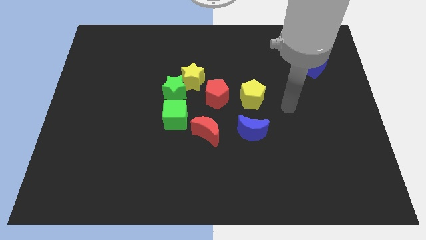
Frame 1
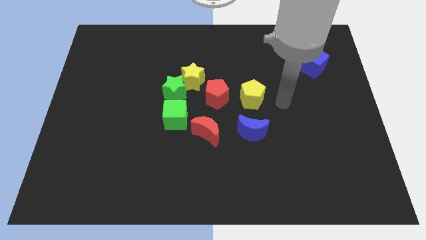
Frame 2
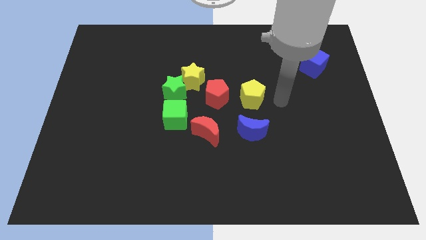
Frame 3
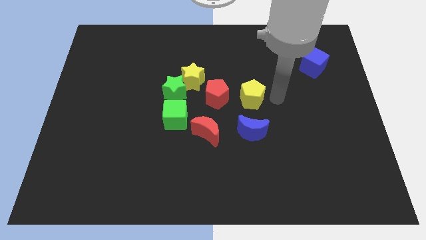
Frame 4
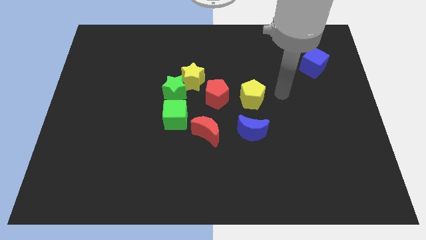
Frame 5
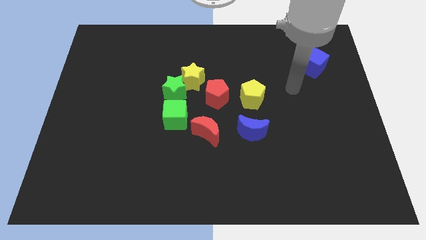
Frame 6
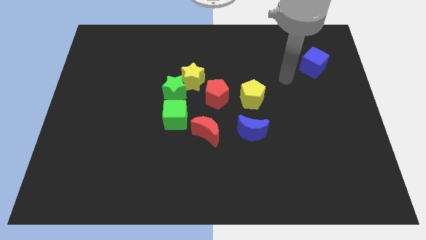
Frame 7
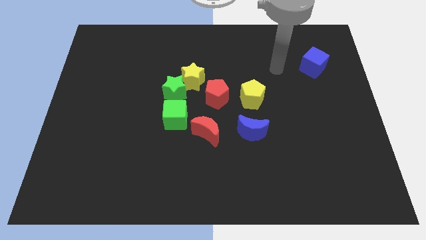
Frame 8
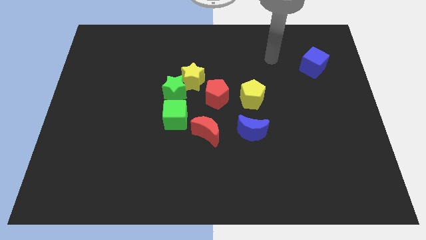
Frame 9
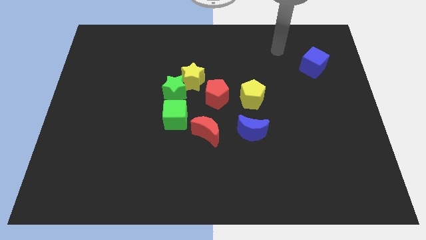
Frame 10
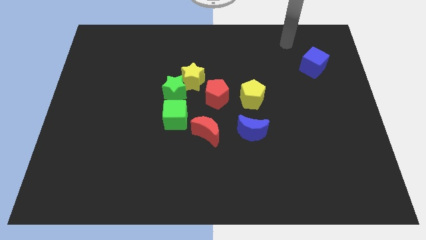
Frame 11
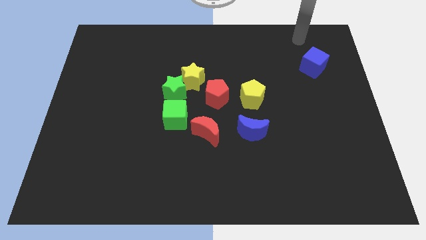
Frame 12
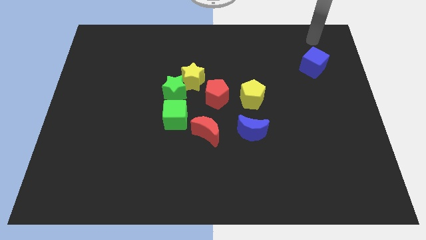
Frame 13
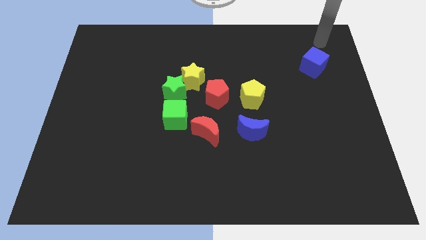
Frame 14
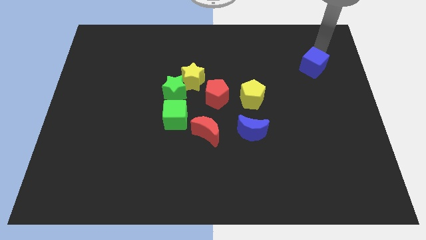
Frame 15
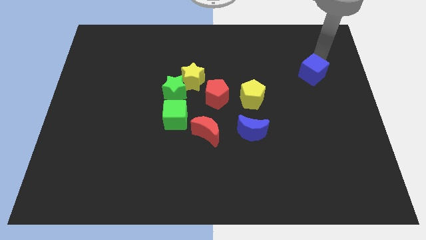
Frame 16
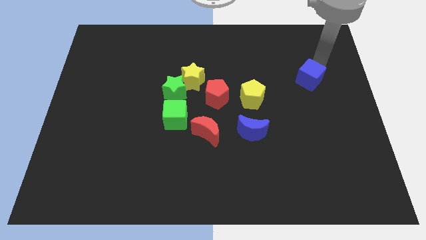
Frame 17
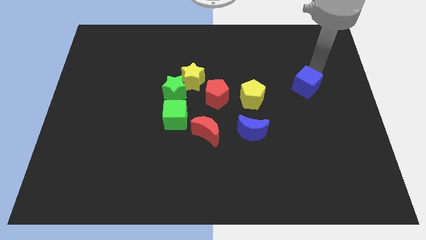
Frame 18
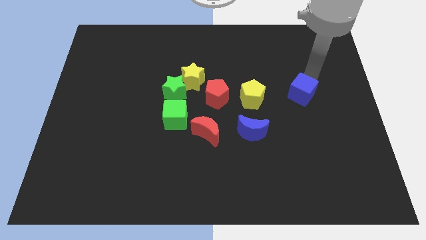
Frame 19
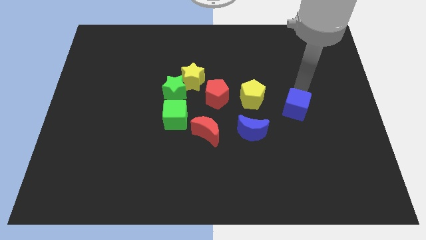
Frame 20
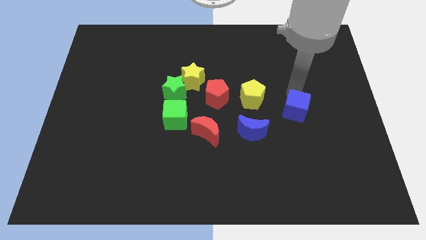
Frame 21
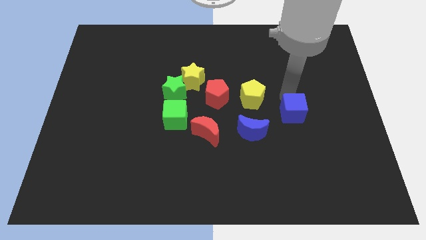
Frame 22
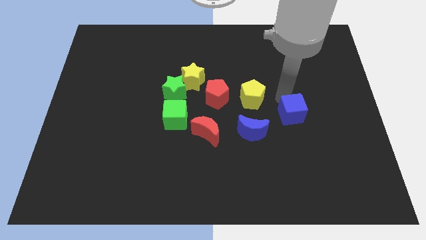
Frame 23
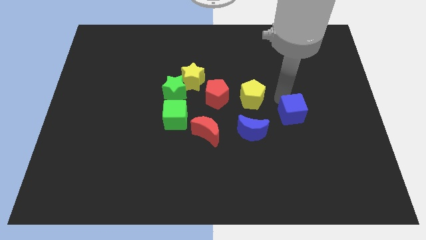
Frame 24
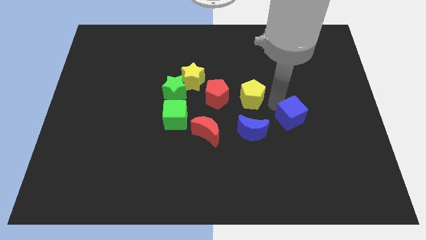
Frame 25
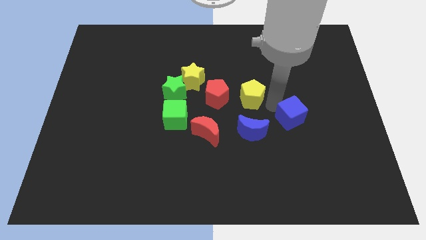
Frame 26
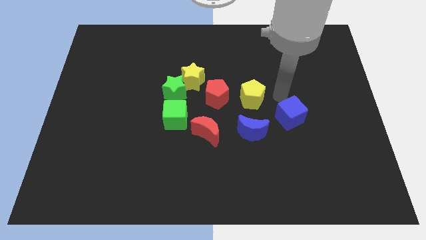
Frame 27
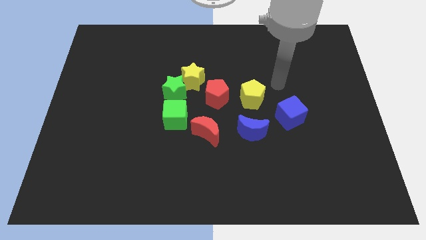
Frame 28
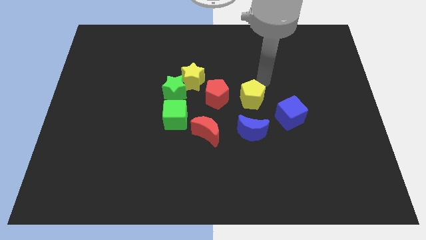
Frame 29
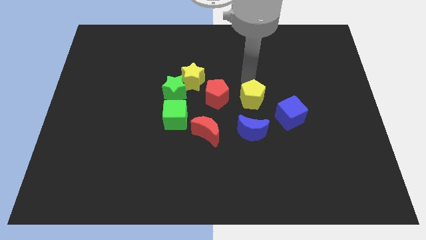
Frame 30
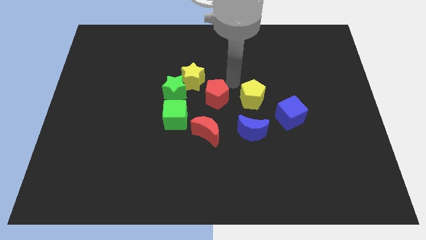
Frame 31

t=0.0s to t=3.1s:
place the blue cube right to the blue moon

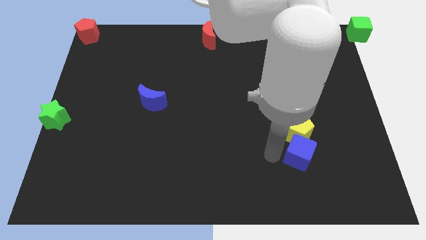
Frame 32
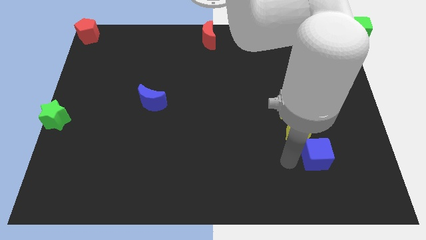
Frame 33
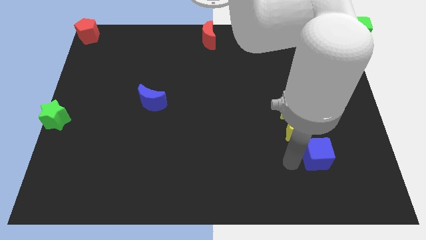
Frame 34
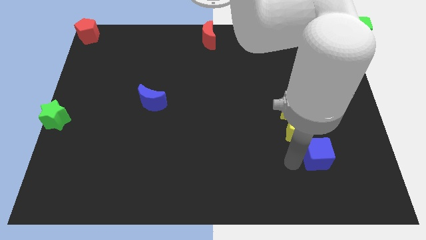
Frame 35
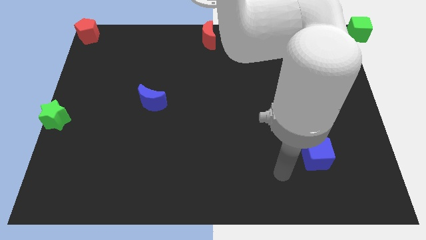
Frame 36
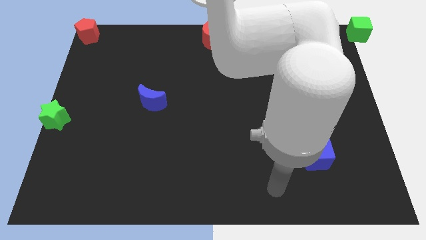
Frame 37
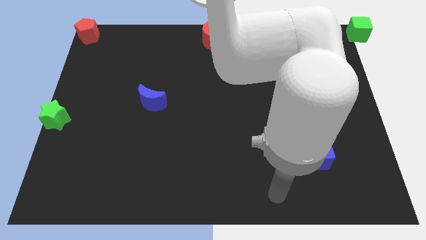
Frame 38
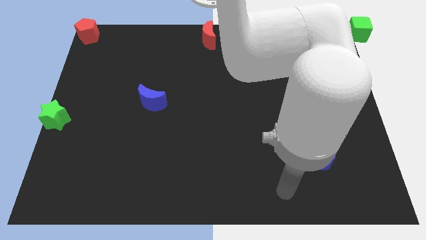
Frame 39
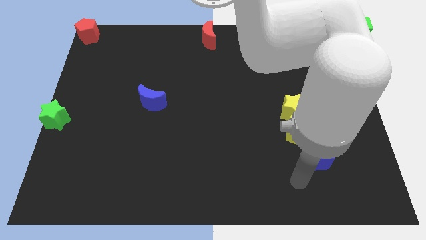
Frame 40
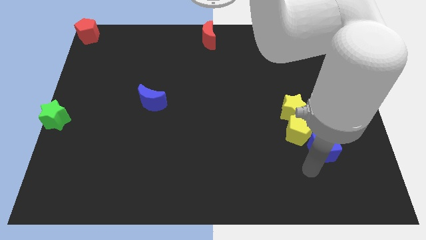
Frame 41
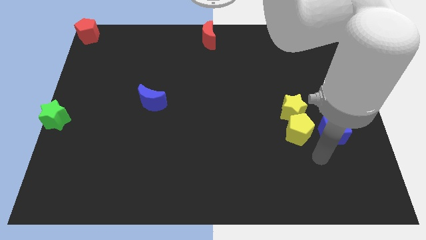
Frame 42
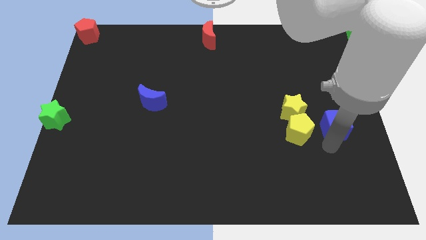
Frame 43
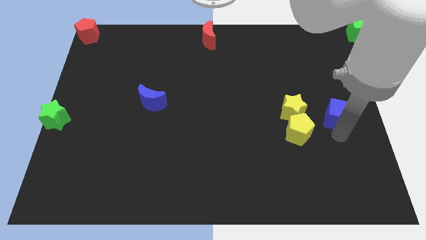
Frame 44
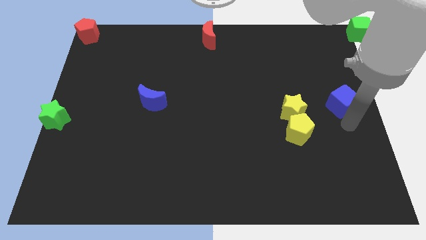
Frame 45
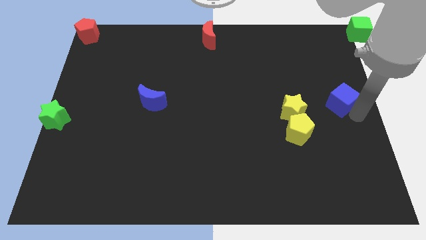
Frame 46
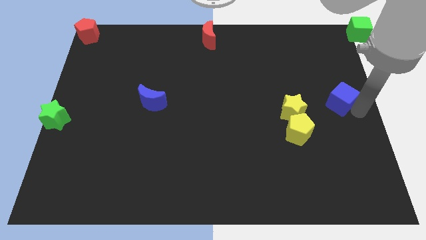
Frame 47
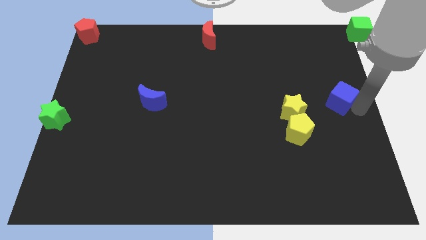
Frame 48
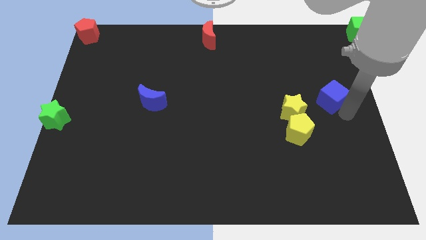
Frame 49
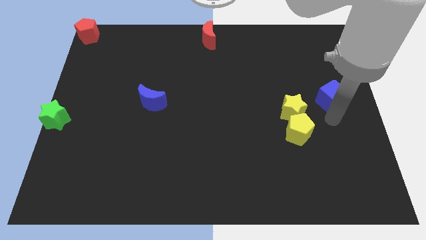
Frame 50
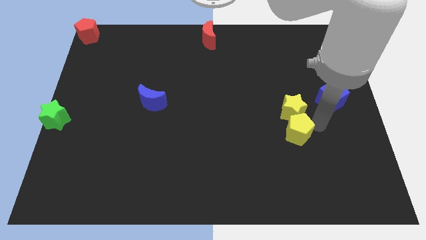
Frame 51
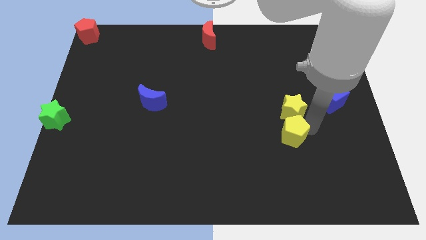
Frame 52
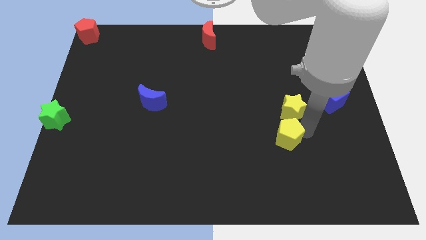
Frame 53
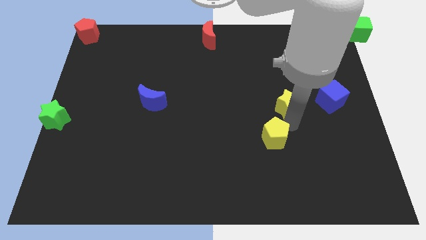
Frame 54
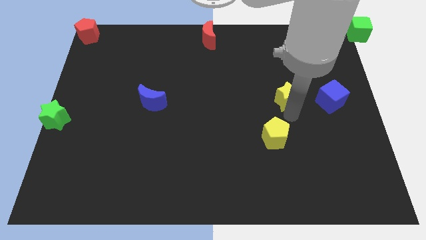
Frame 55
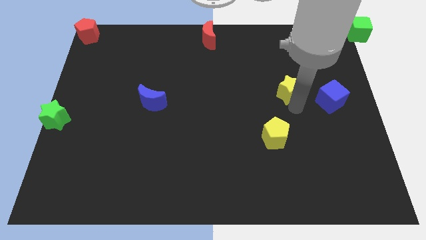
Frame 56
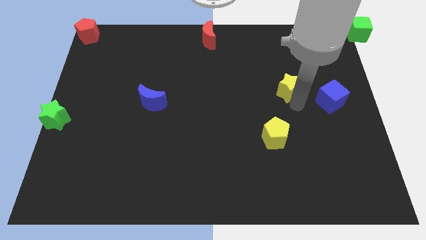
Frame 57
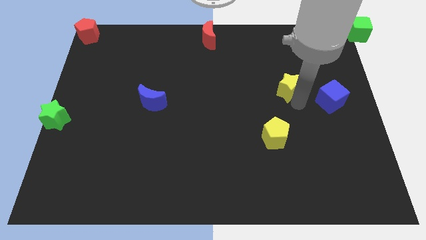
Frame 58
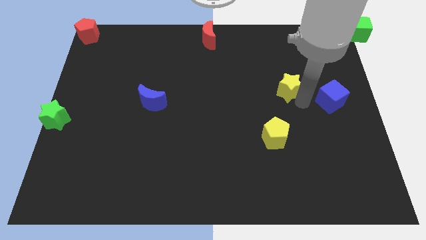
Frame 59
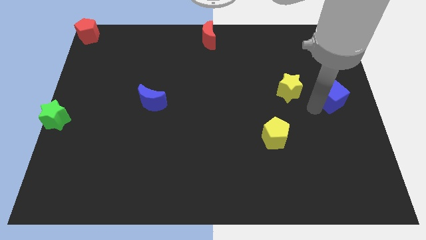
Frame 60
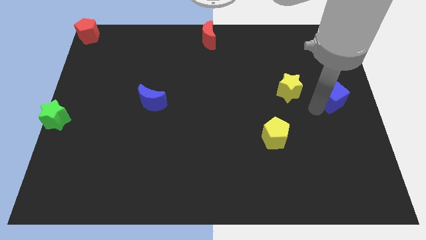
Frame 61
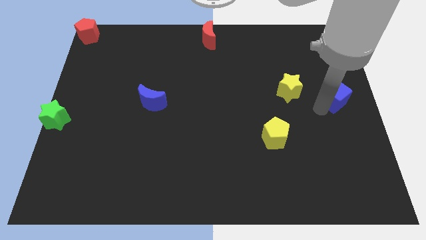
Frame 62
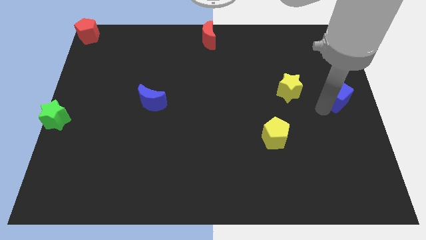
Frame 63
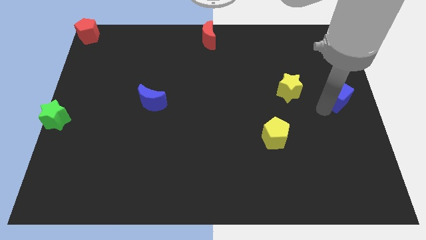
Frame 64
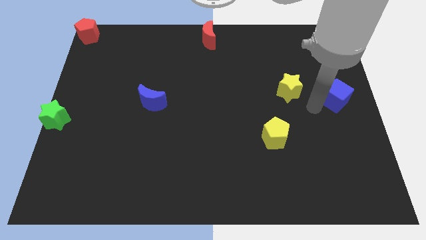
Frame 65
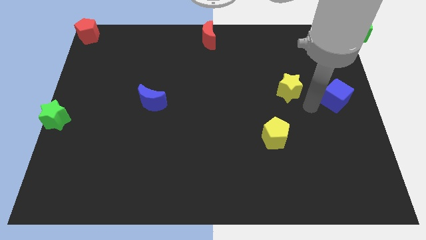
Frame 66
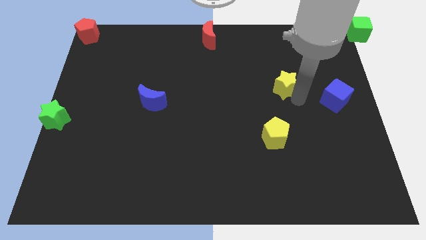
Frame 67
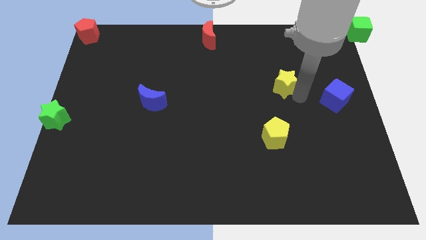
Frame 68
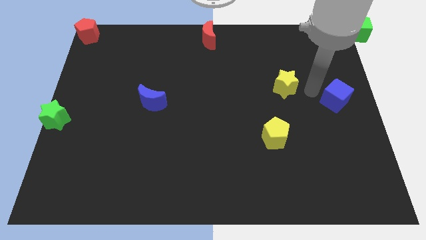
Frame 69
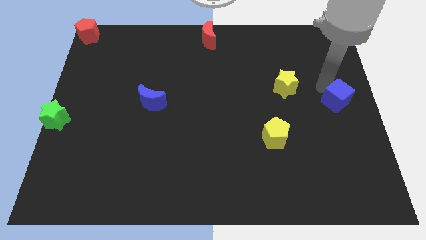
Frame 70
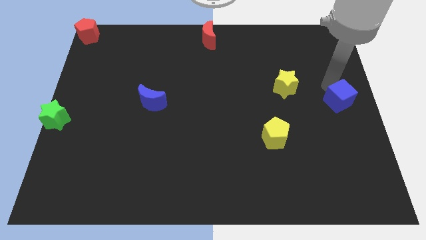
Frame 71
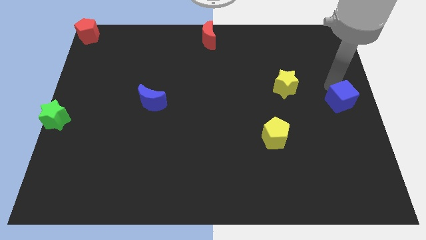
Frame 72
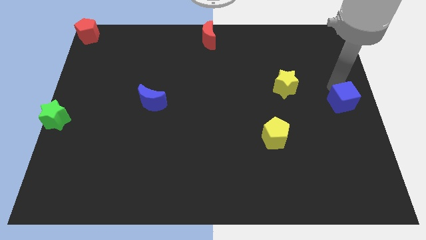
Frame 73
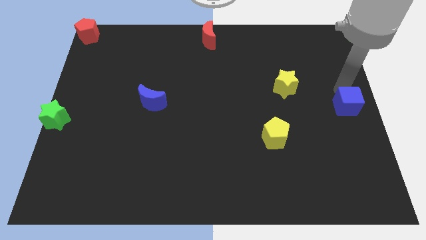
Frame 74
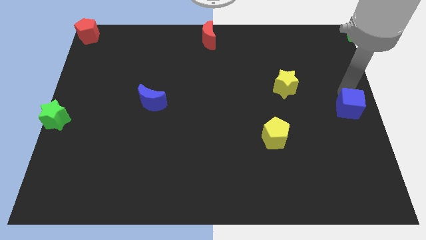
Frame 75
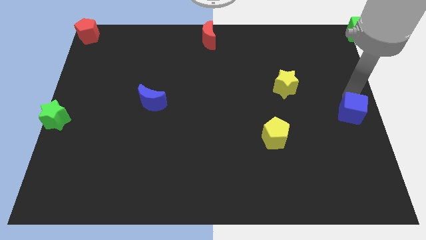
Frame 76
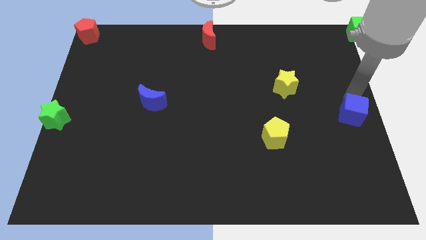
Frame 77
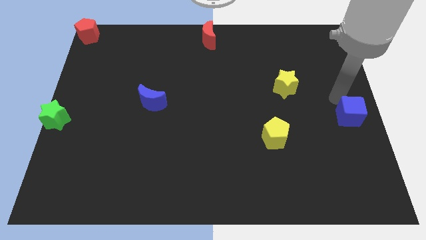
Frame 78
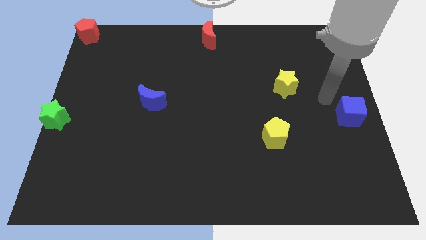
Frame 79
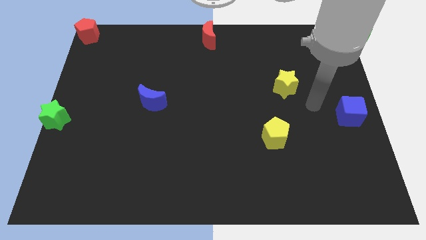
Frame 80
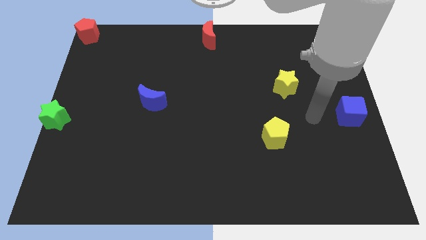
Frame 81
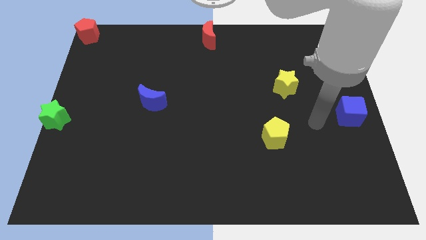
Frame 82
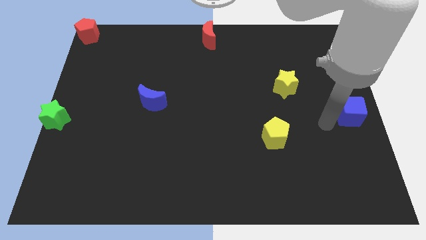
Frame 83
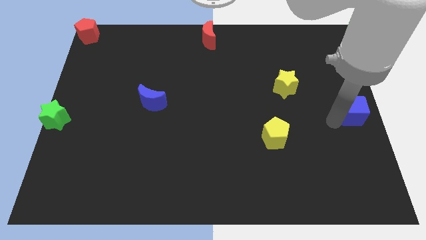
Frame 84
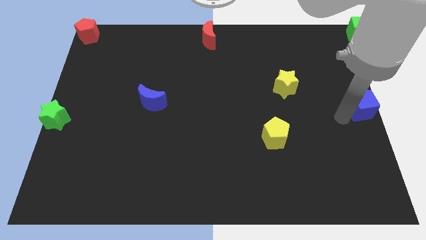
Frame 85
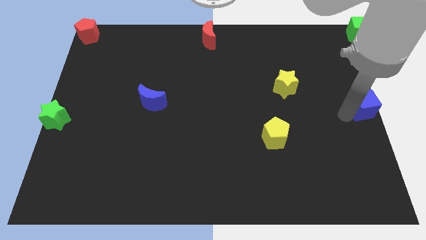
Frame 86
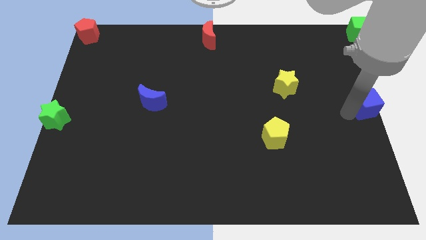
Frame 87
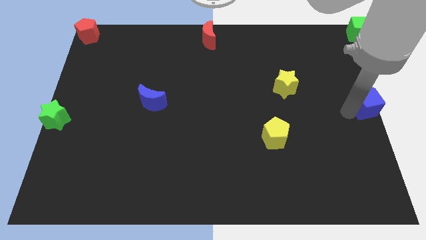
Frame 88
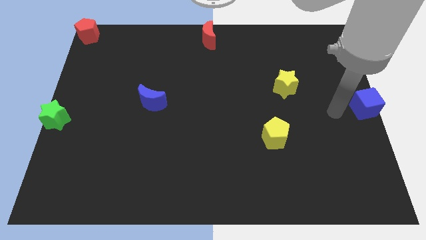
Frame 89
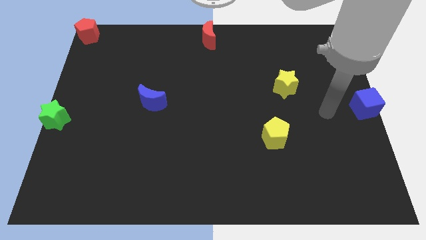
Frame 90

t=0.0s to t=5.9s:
move the blue cube to the center right of the board
